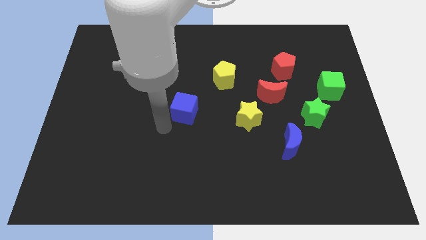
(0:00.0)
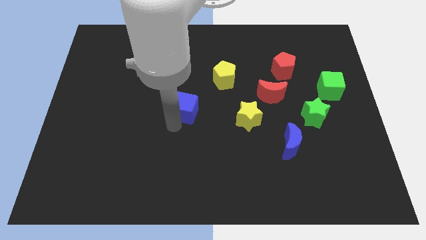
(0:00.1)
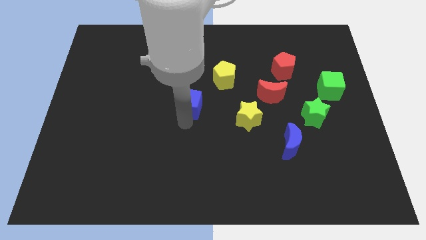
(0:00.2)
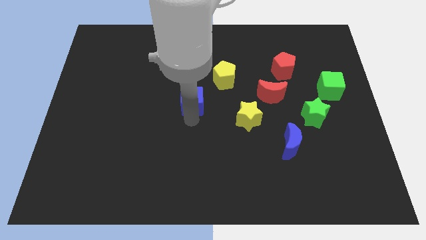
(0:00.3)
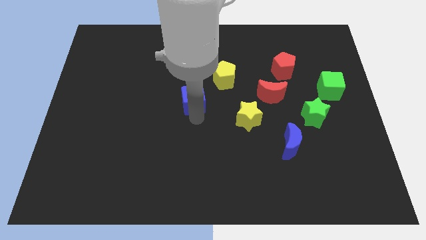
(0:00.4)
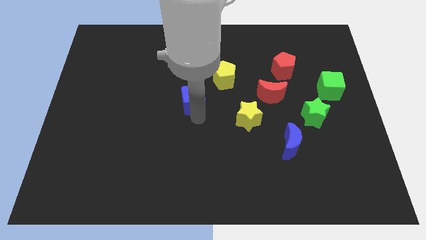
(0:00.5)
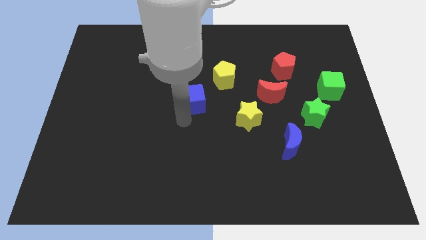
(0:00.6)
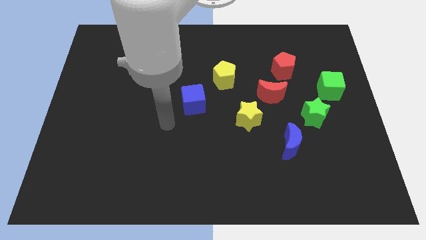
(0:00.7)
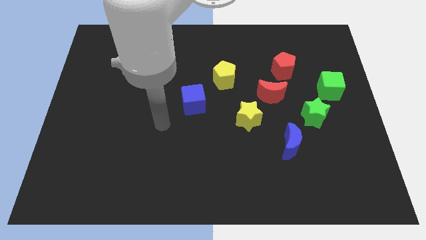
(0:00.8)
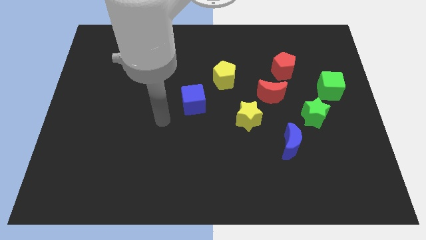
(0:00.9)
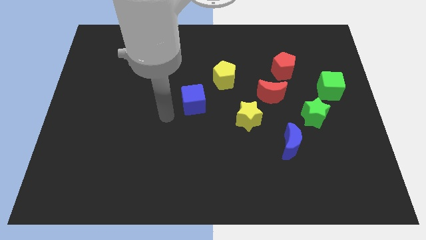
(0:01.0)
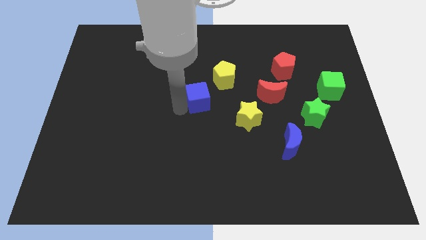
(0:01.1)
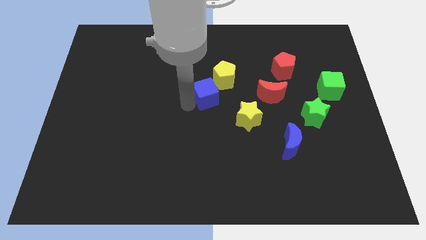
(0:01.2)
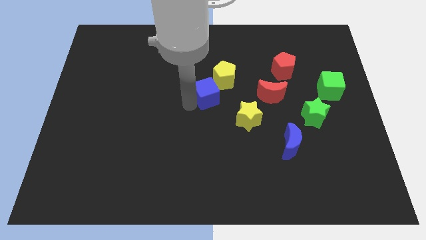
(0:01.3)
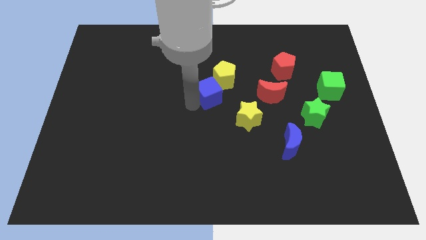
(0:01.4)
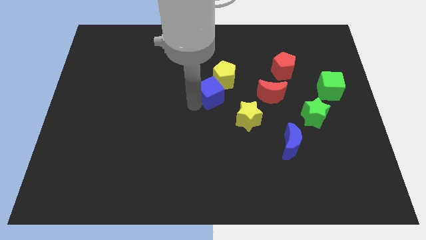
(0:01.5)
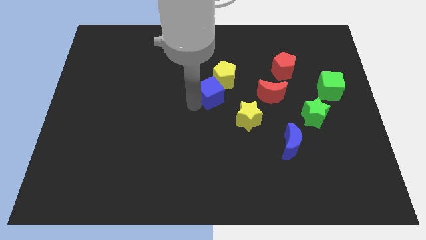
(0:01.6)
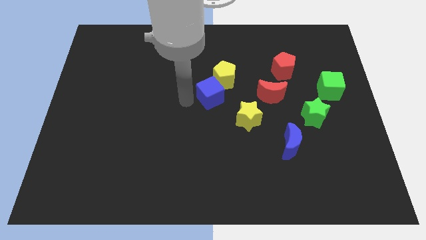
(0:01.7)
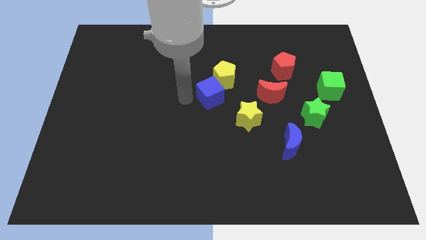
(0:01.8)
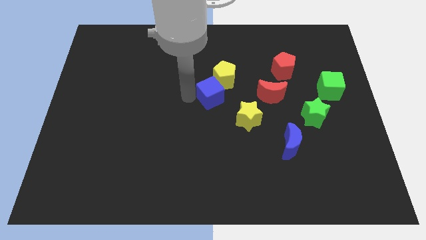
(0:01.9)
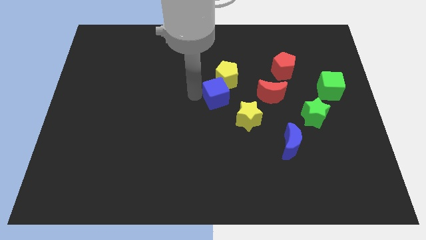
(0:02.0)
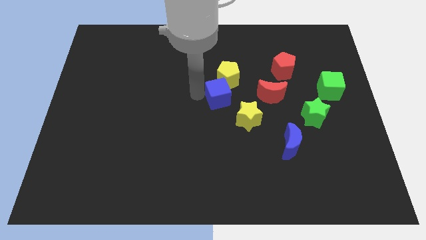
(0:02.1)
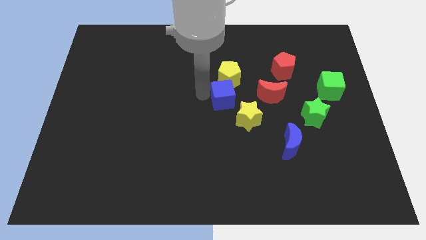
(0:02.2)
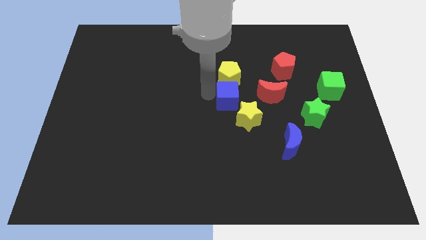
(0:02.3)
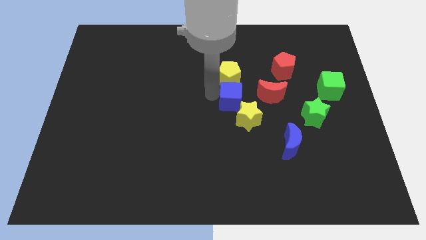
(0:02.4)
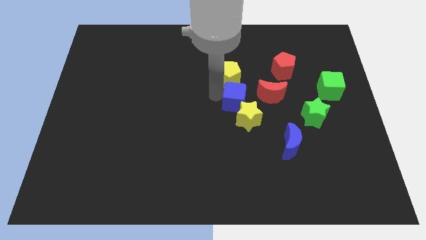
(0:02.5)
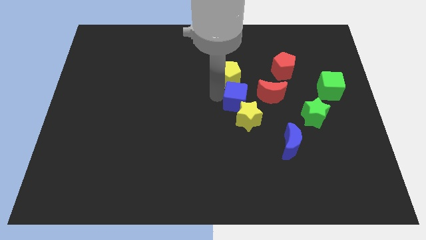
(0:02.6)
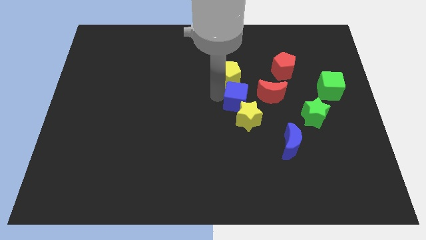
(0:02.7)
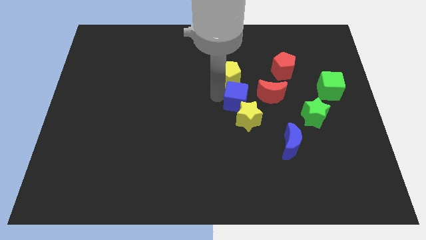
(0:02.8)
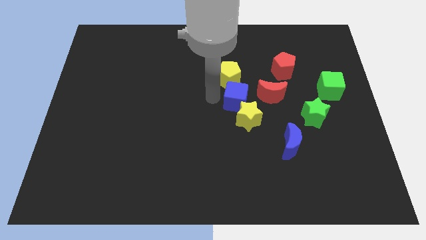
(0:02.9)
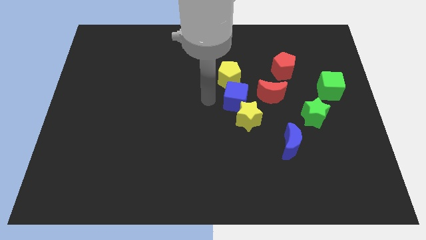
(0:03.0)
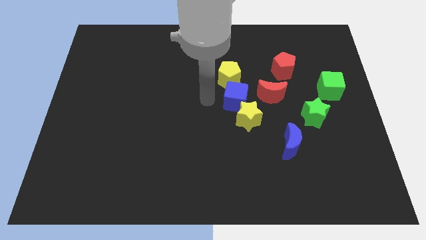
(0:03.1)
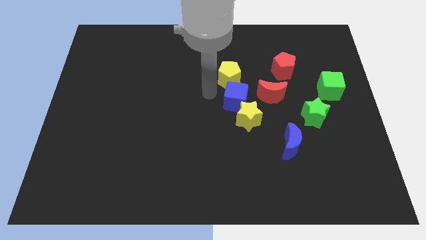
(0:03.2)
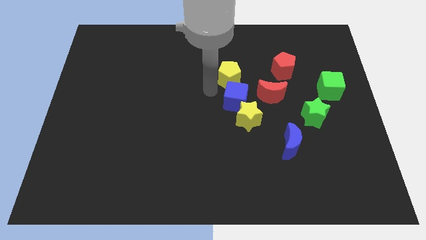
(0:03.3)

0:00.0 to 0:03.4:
place the blue cube diagonally in between the yellow pentagon and yellow star

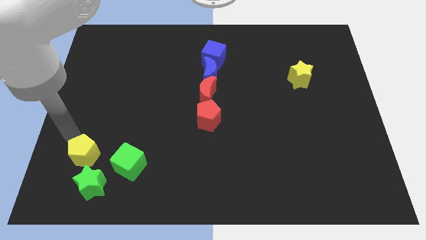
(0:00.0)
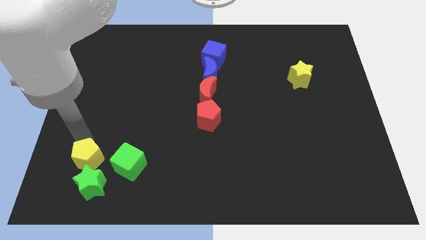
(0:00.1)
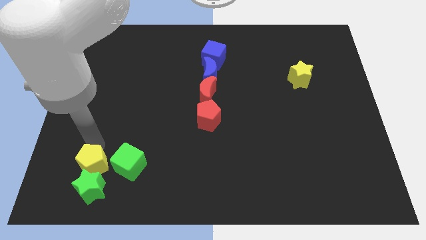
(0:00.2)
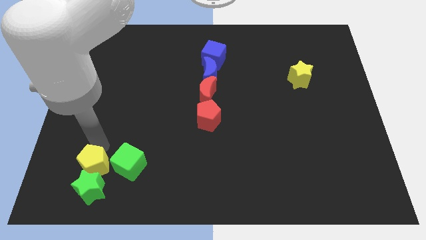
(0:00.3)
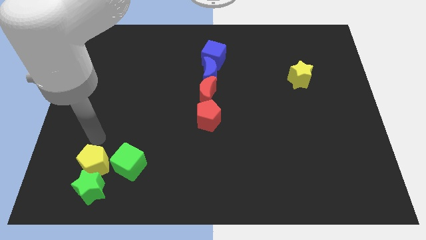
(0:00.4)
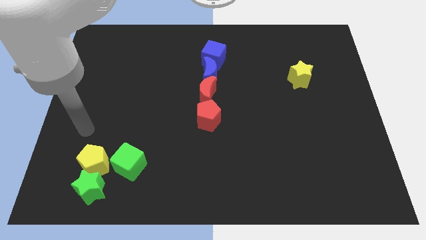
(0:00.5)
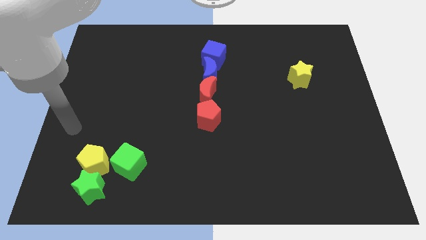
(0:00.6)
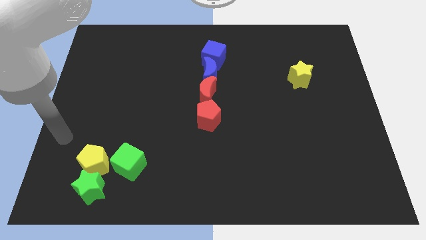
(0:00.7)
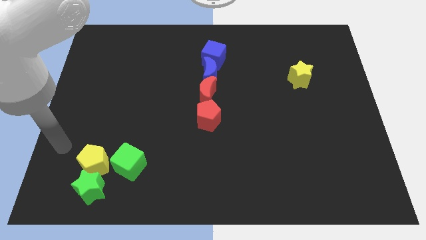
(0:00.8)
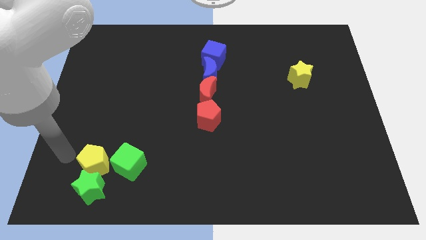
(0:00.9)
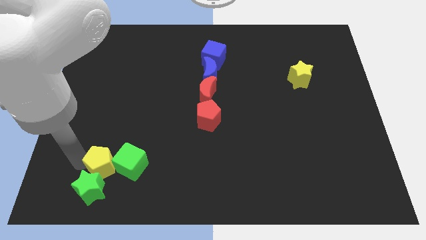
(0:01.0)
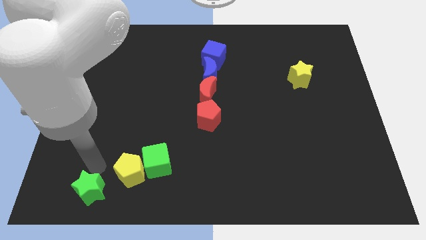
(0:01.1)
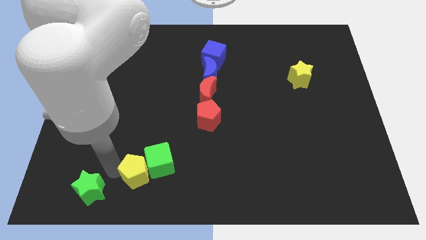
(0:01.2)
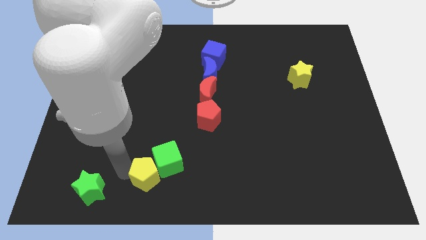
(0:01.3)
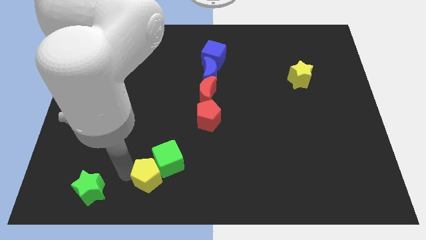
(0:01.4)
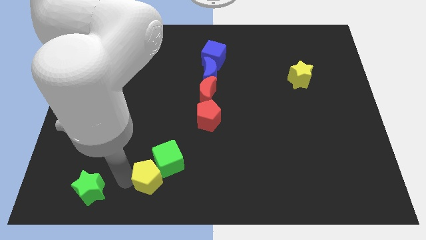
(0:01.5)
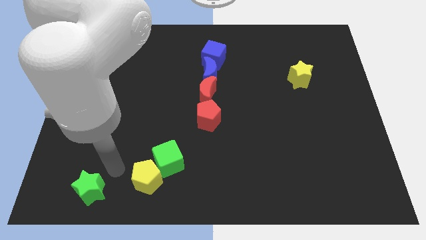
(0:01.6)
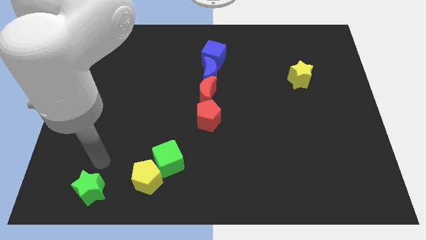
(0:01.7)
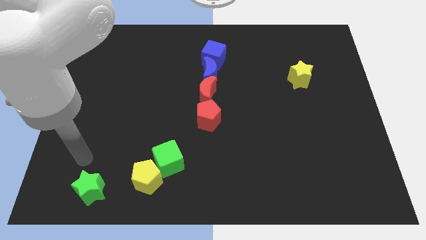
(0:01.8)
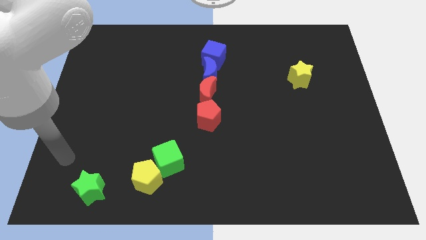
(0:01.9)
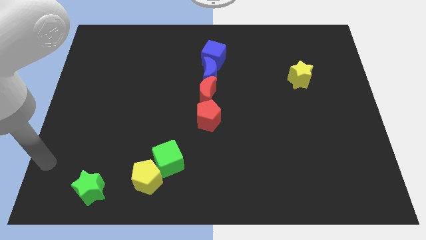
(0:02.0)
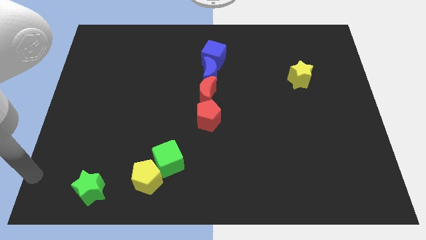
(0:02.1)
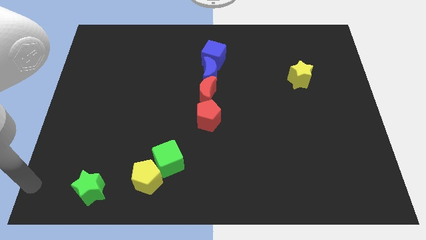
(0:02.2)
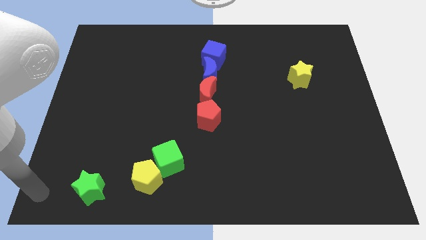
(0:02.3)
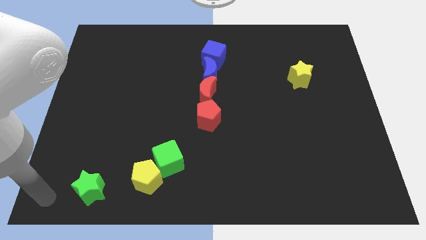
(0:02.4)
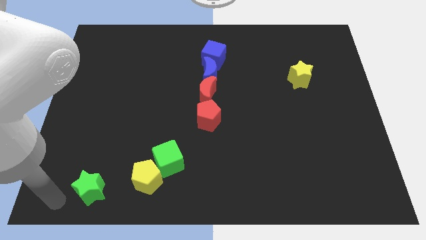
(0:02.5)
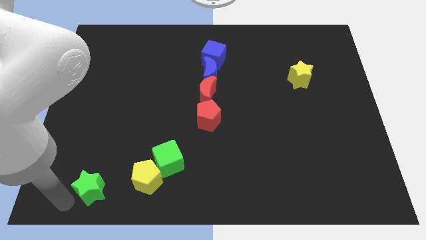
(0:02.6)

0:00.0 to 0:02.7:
place yellow pentagon below green cube

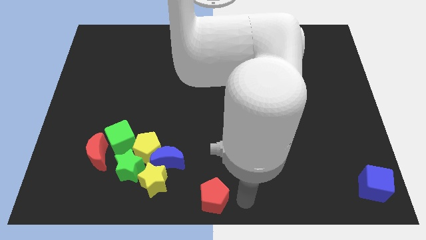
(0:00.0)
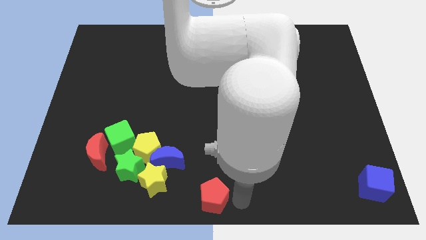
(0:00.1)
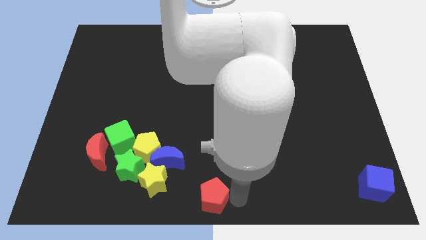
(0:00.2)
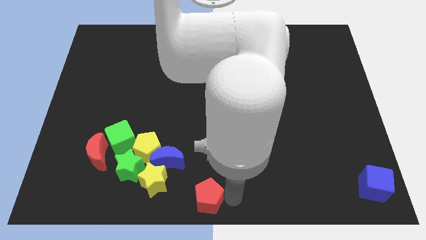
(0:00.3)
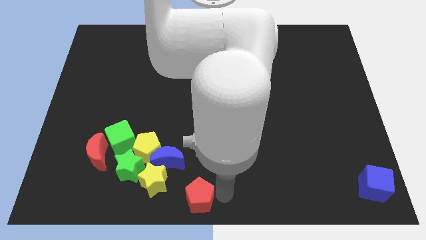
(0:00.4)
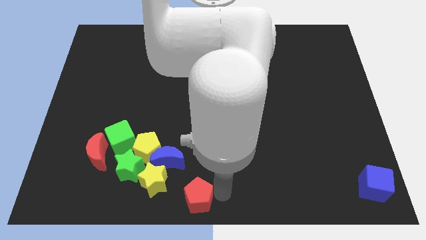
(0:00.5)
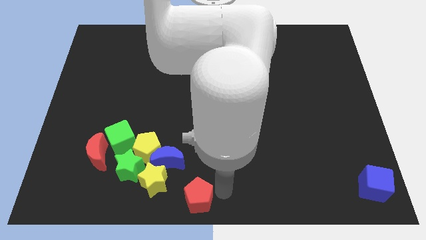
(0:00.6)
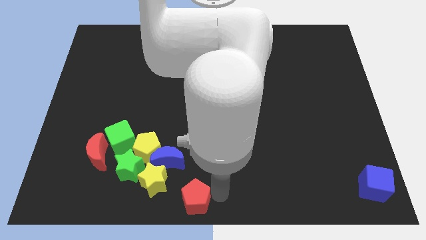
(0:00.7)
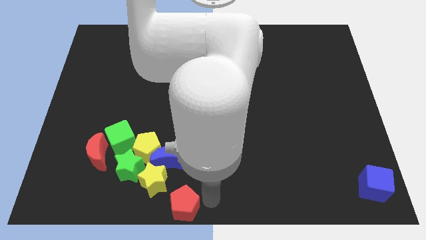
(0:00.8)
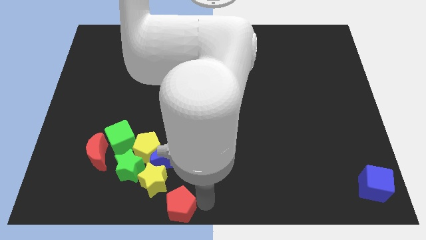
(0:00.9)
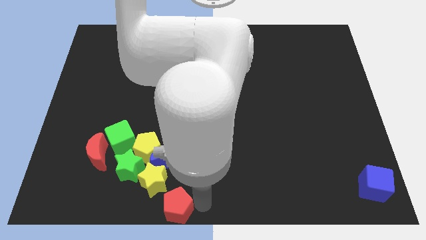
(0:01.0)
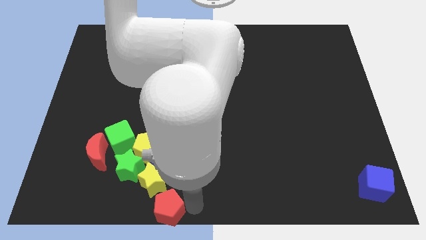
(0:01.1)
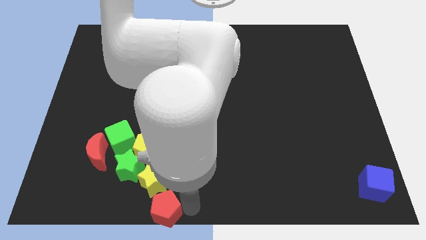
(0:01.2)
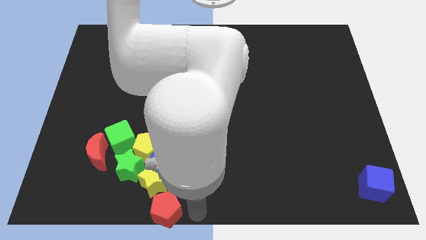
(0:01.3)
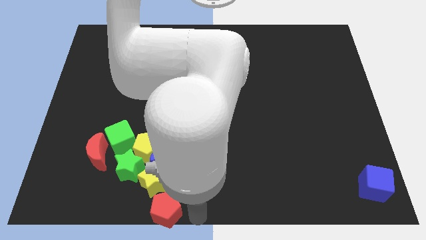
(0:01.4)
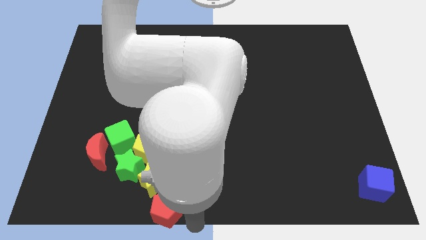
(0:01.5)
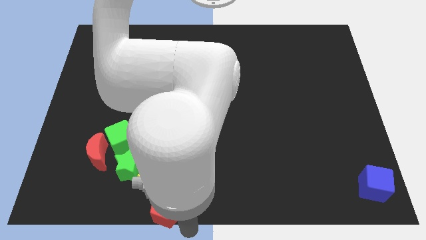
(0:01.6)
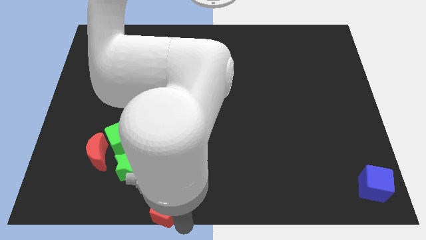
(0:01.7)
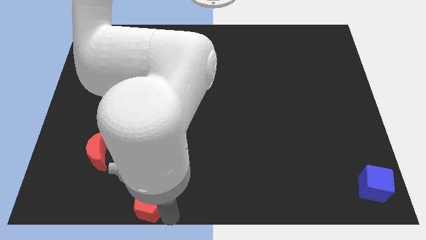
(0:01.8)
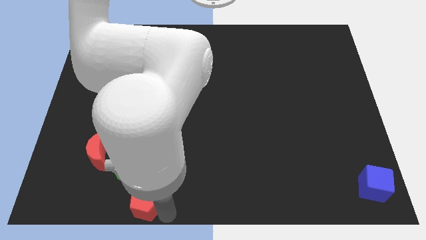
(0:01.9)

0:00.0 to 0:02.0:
move the red pentagon to the bottom of the yellow star

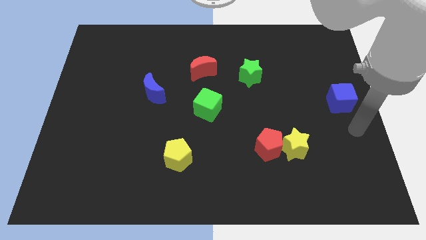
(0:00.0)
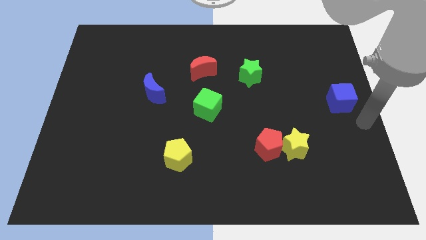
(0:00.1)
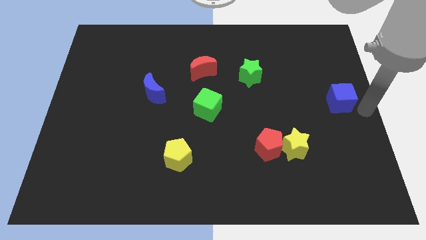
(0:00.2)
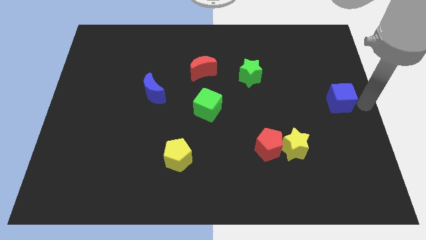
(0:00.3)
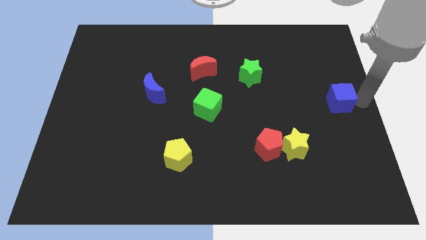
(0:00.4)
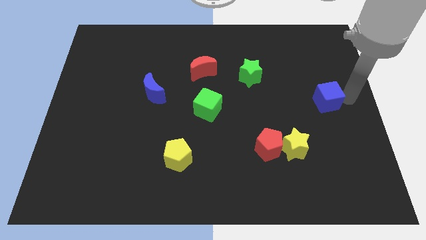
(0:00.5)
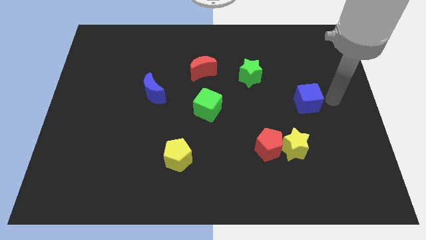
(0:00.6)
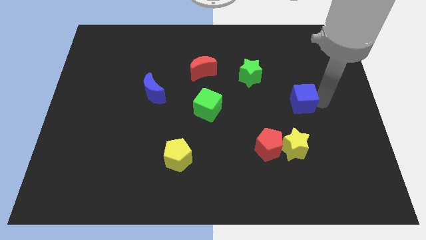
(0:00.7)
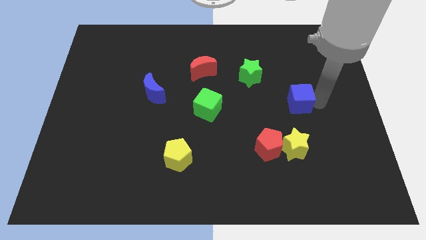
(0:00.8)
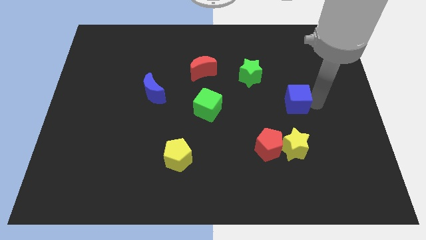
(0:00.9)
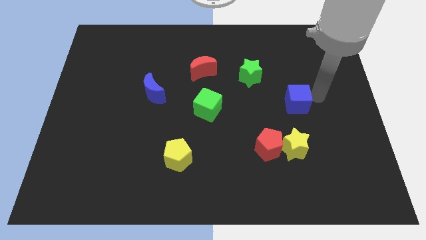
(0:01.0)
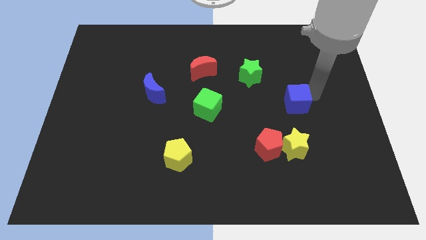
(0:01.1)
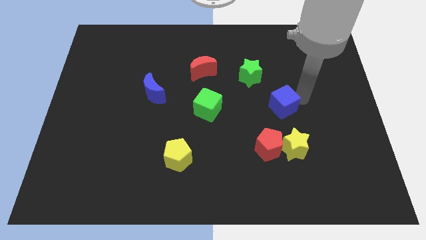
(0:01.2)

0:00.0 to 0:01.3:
push the blue cube above the yellow star
